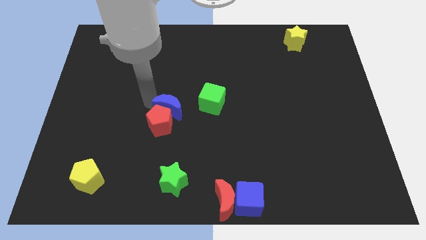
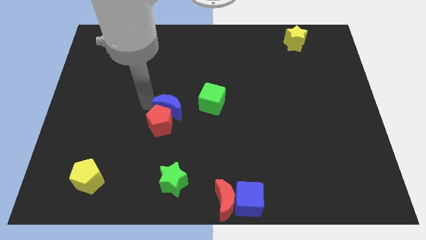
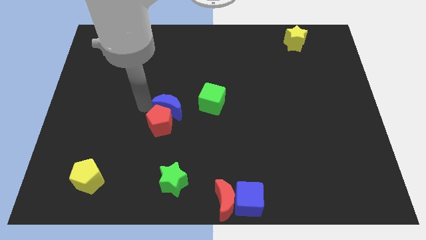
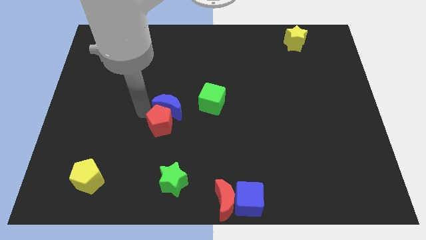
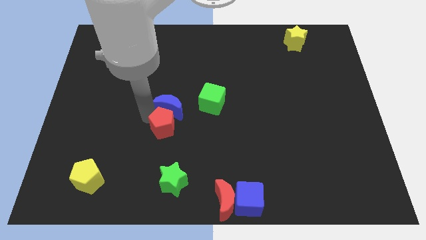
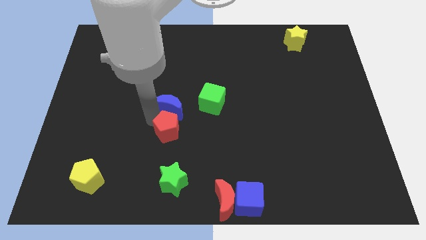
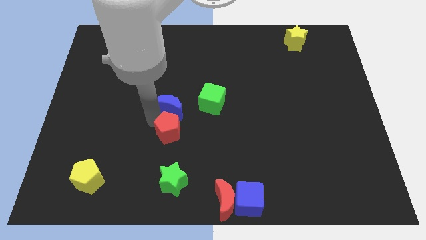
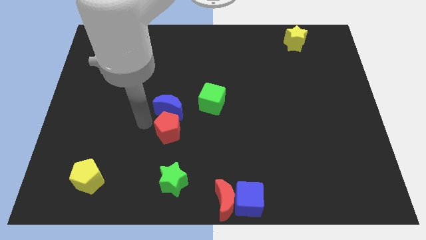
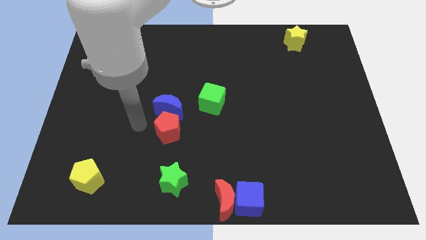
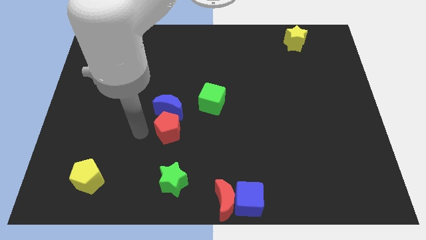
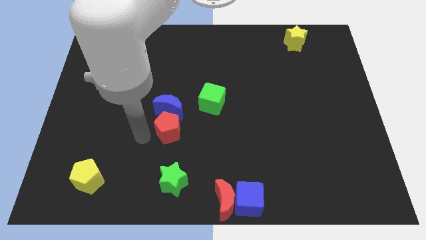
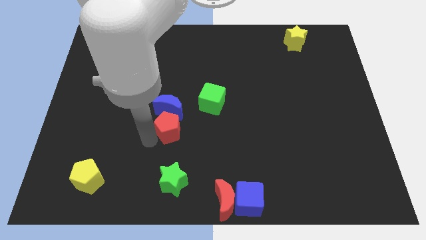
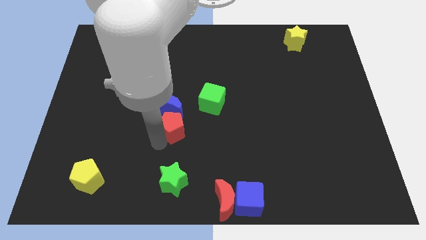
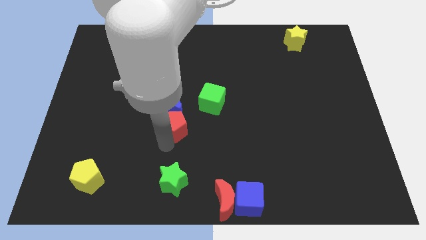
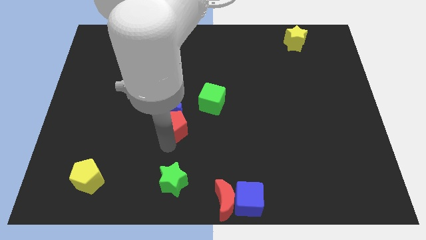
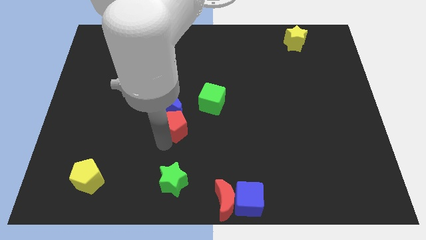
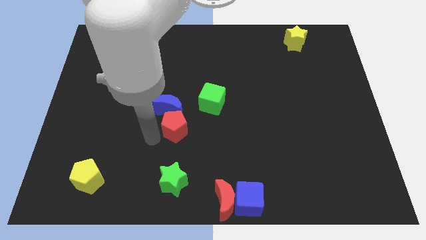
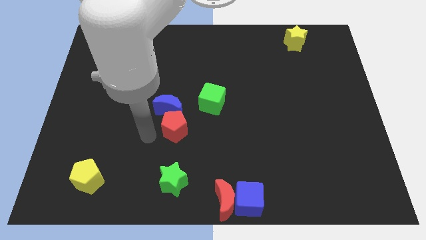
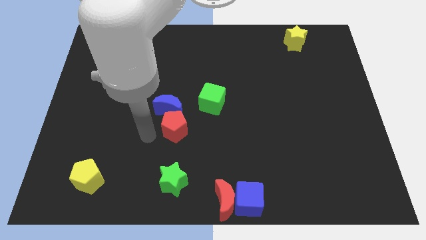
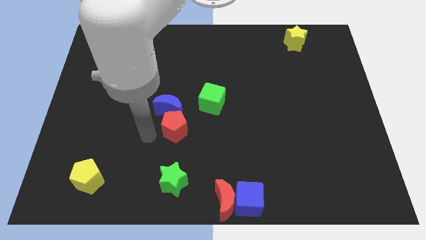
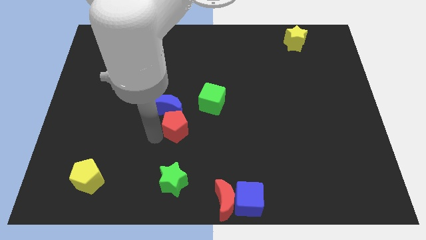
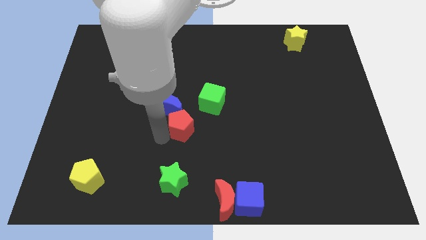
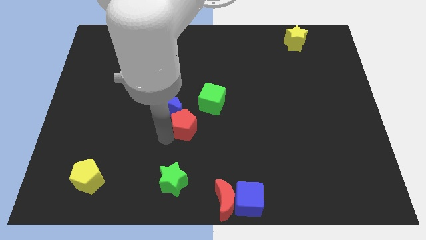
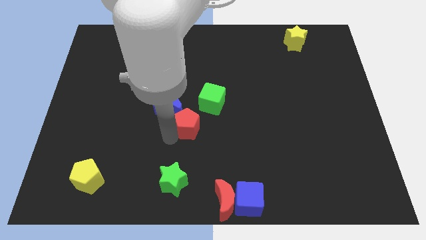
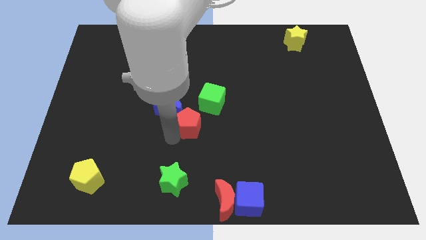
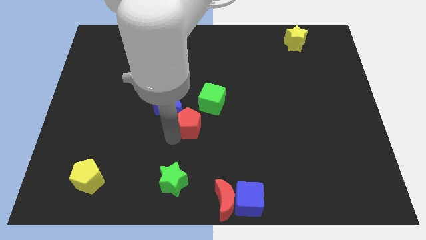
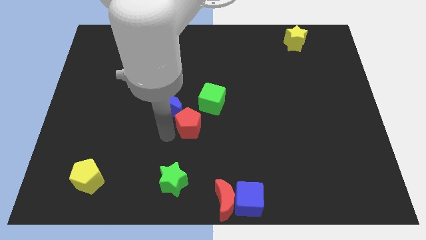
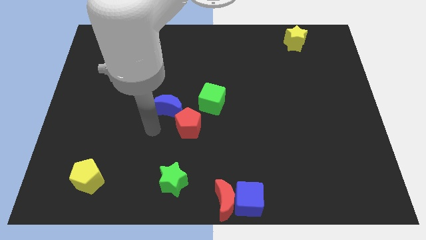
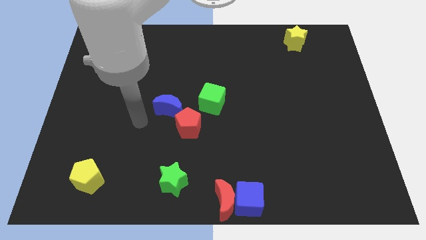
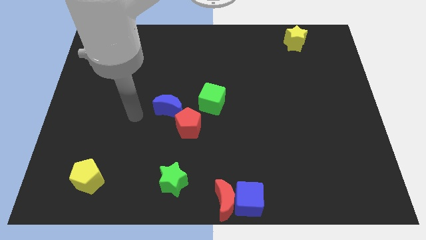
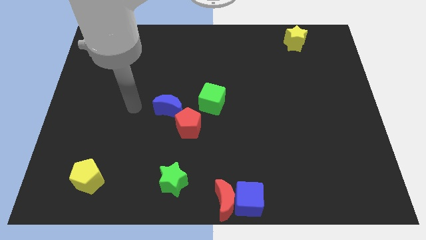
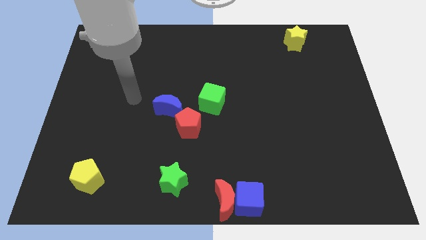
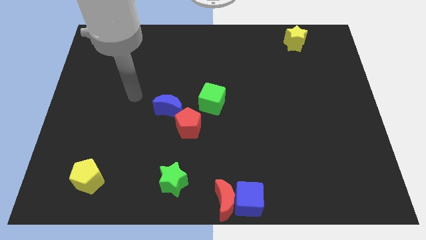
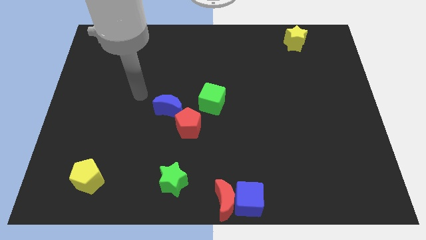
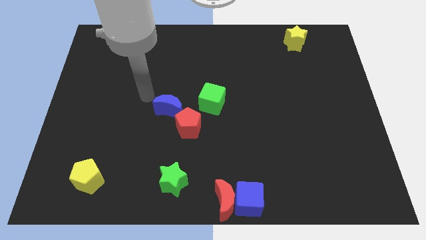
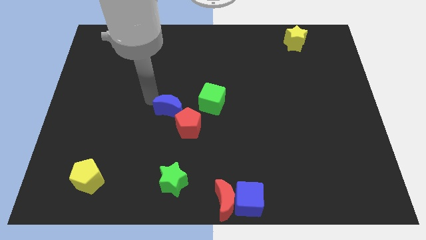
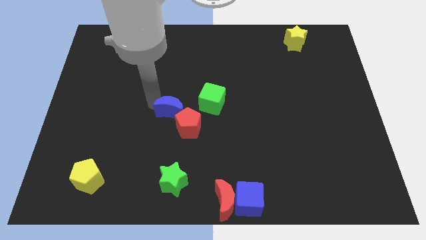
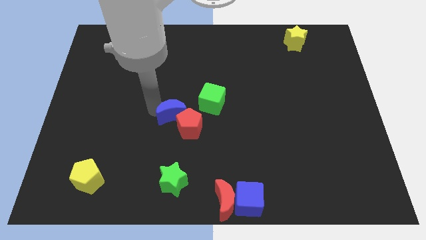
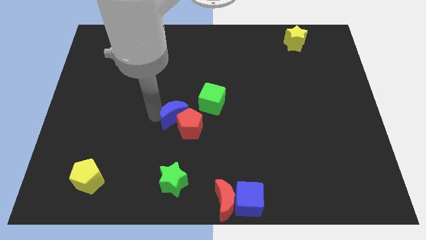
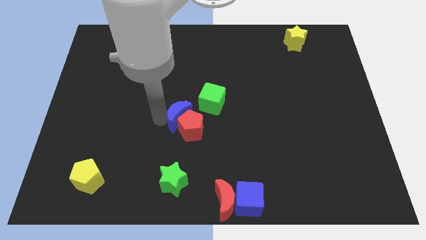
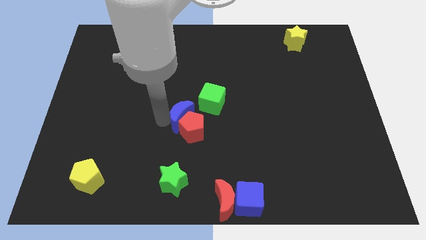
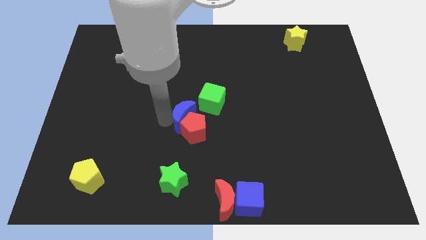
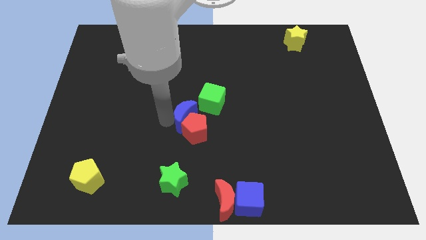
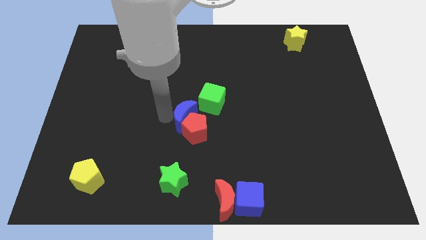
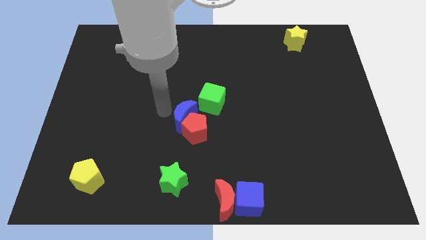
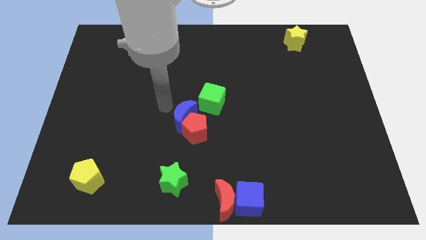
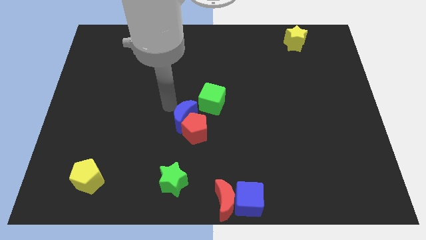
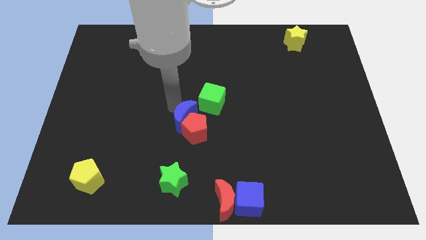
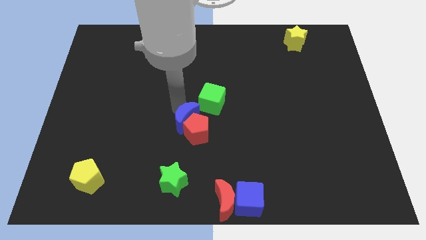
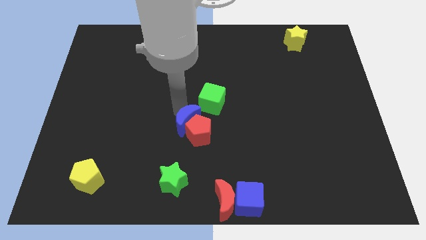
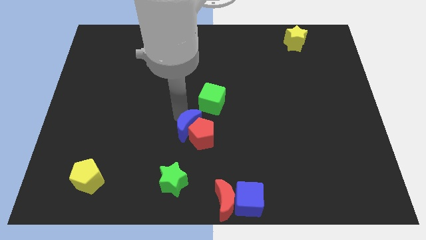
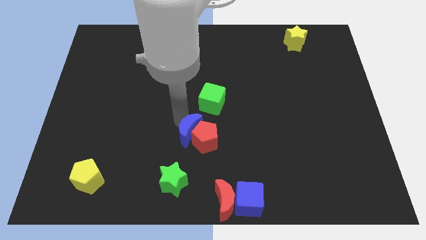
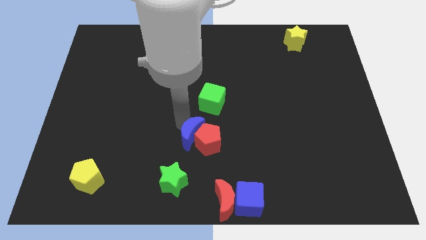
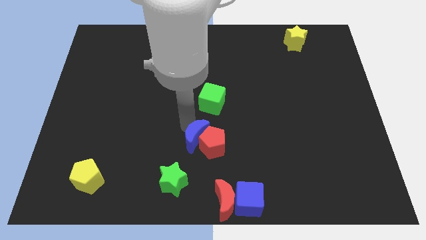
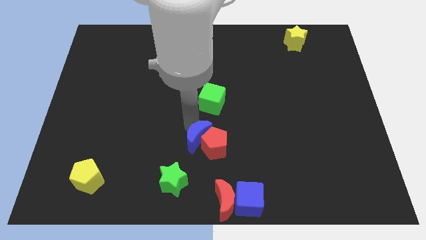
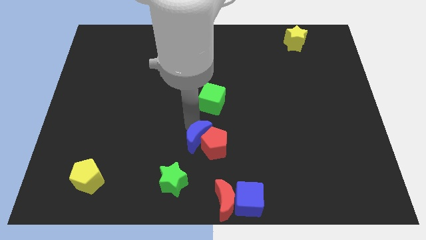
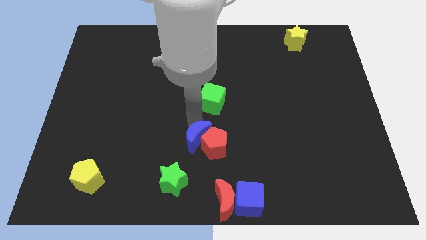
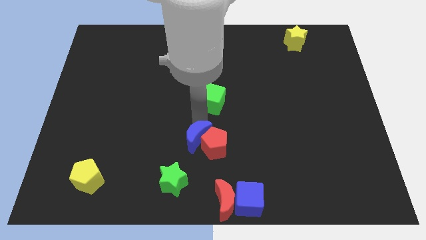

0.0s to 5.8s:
push the blue crescent and red pentagon to the bottom side green cube

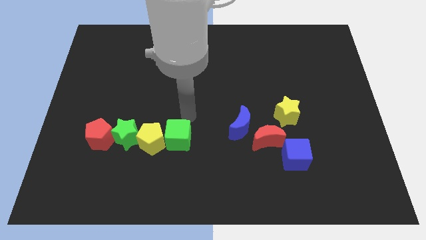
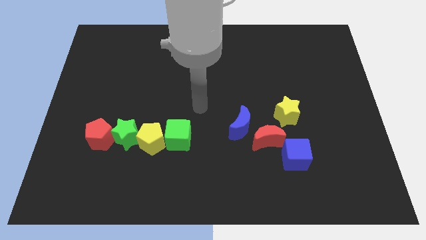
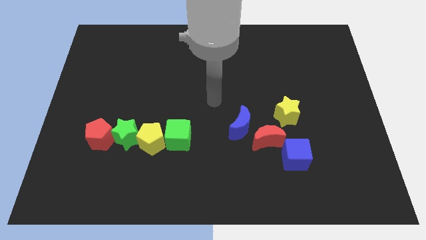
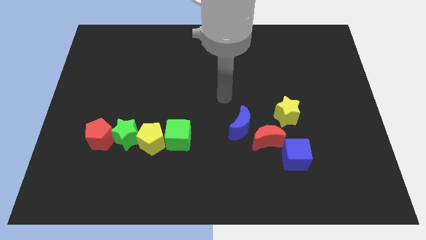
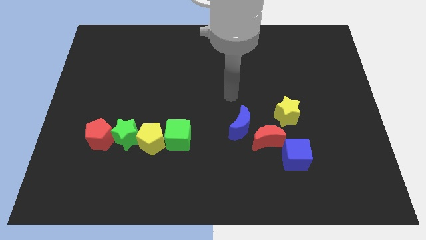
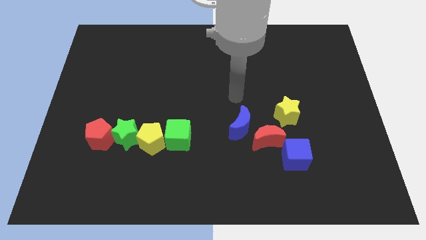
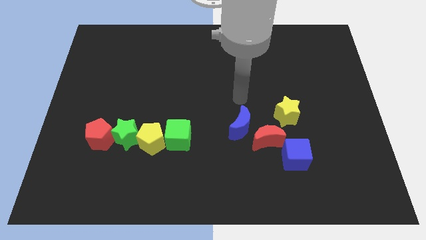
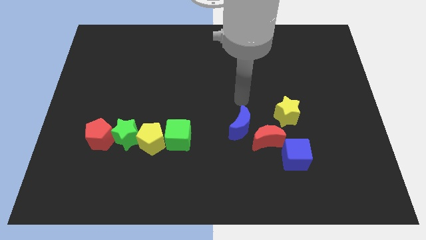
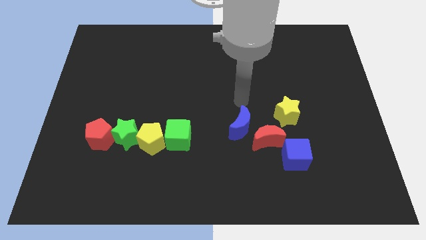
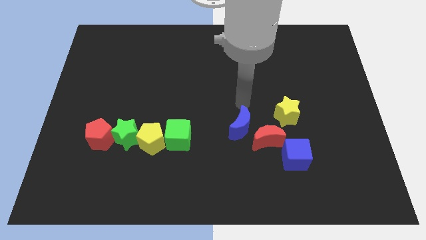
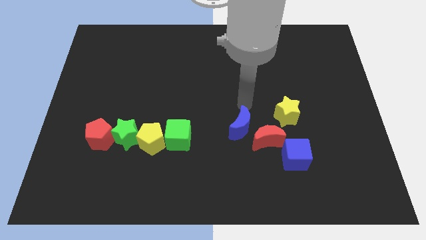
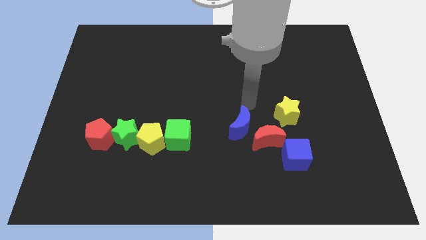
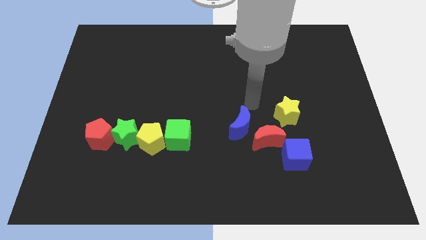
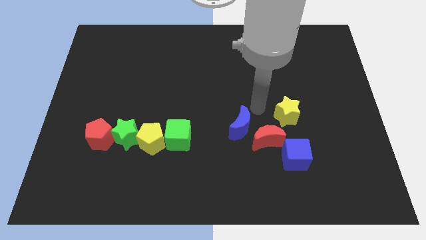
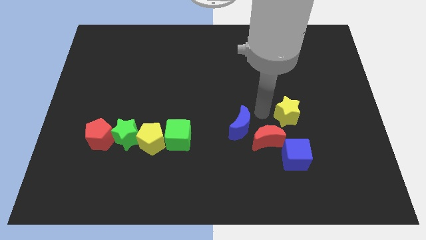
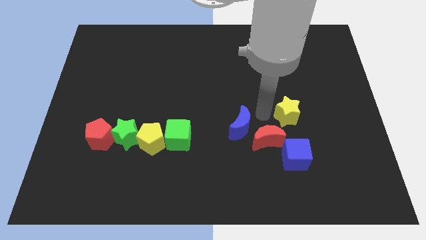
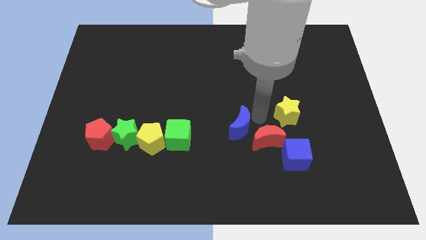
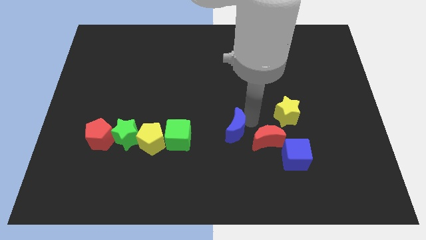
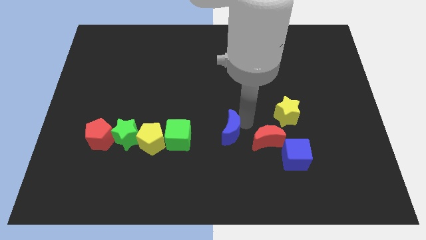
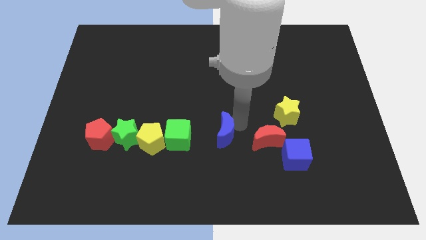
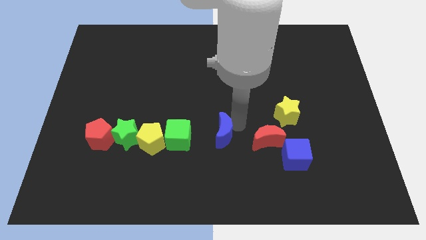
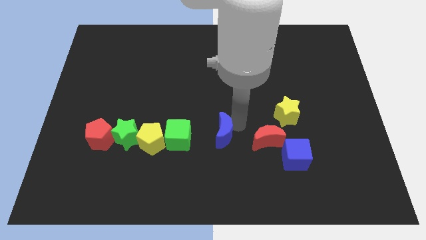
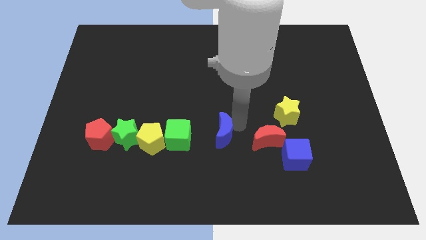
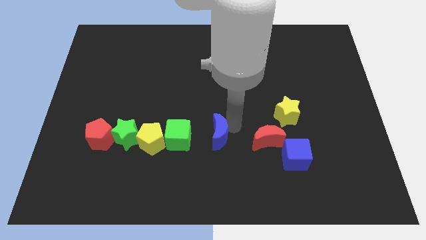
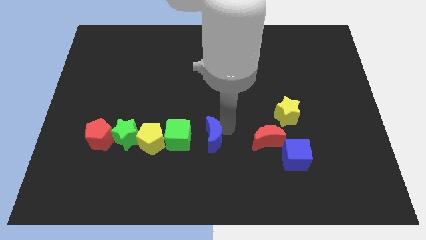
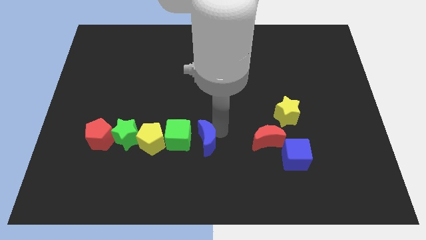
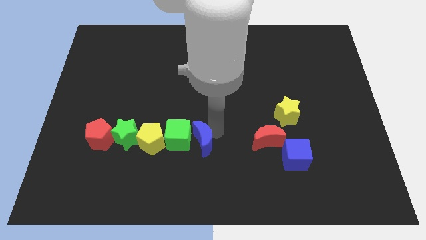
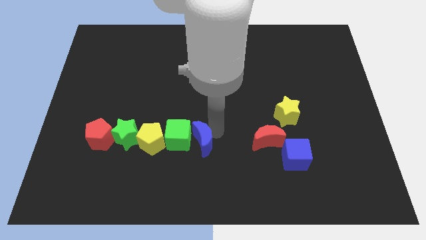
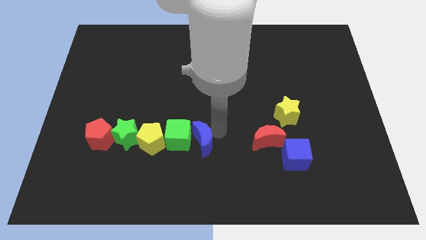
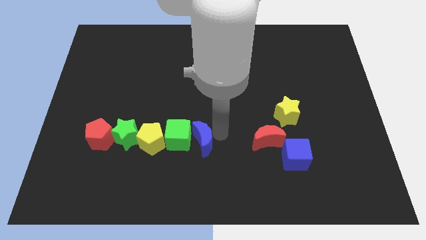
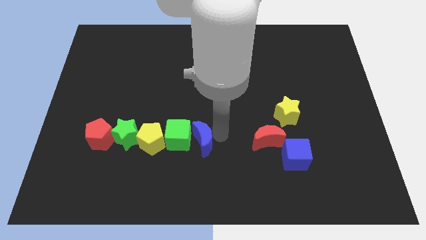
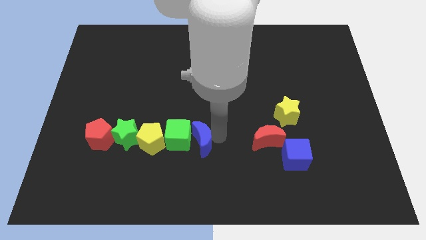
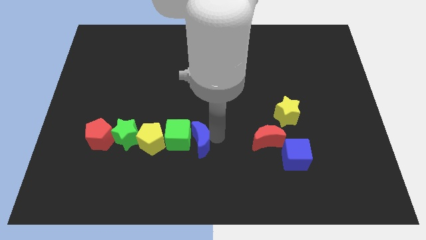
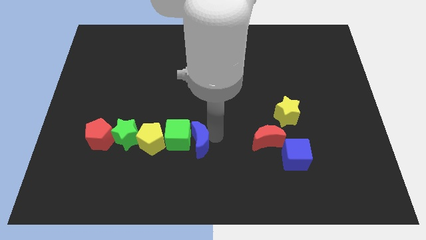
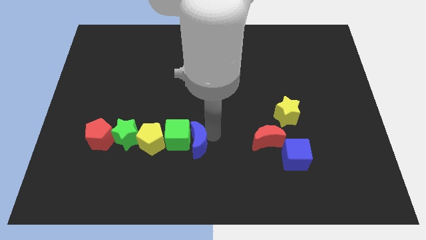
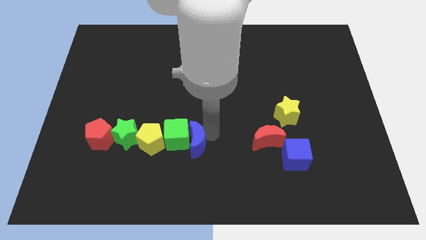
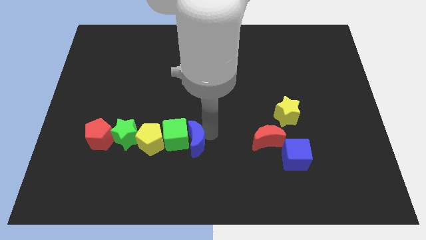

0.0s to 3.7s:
slide the blue moon into the green cube
